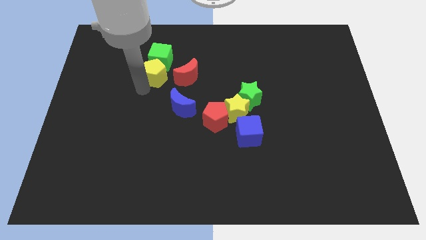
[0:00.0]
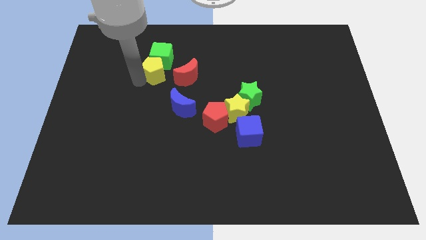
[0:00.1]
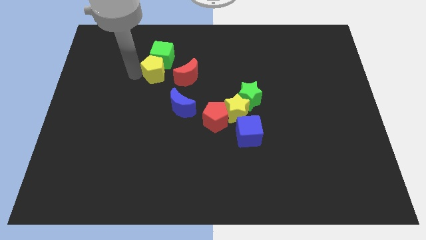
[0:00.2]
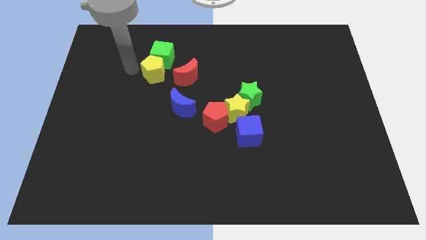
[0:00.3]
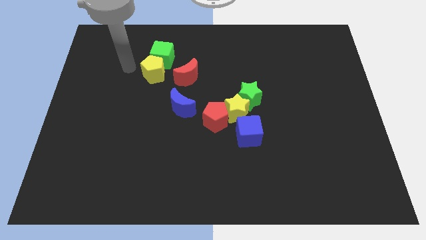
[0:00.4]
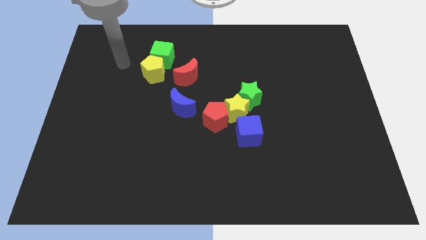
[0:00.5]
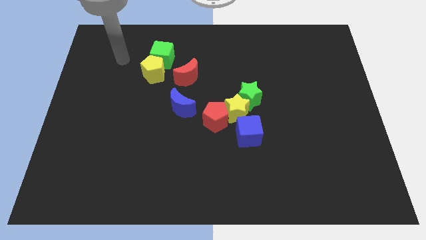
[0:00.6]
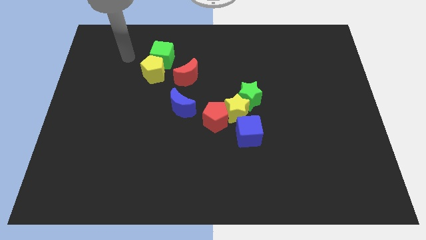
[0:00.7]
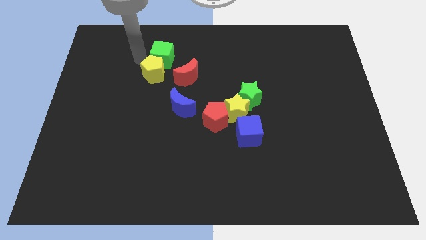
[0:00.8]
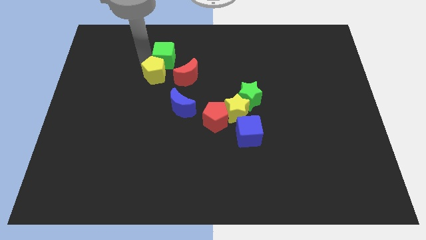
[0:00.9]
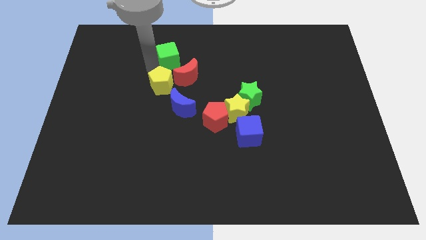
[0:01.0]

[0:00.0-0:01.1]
move the arm slightly touching the yellow pentagon from the left

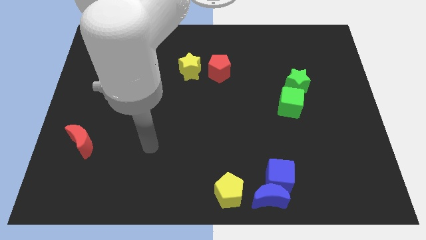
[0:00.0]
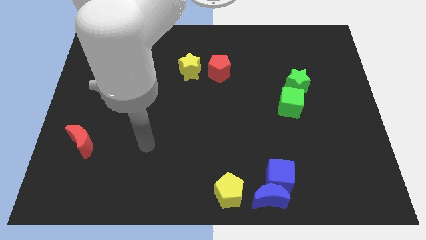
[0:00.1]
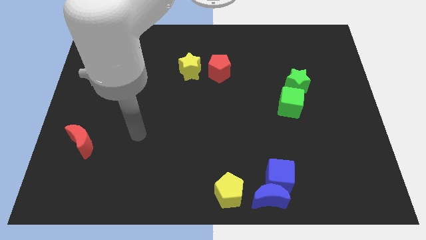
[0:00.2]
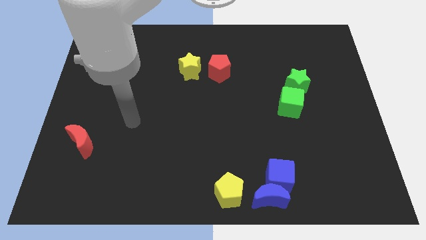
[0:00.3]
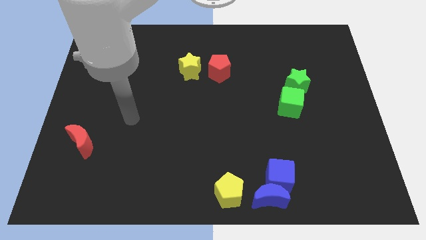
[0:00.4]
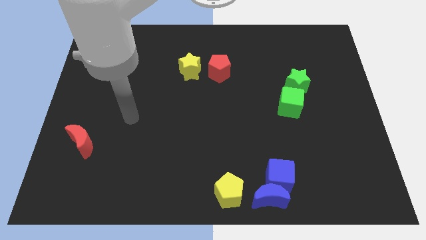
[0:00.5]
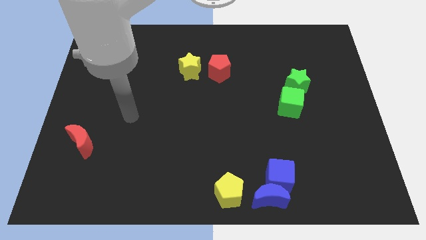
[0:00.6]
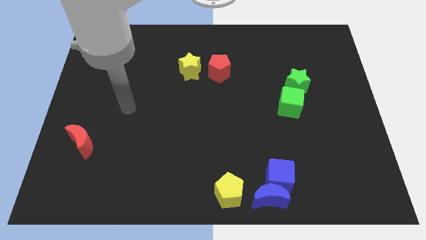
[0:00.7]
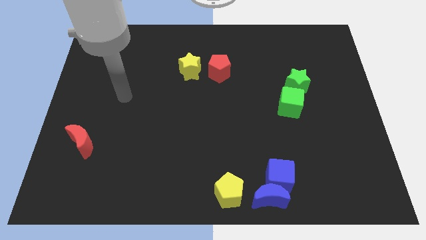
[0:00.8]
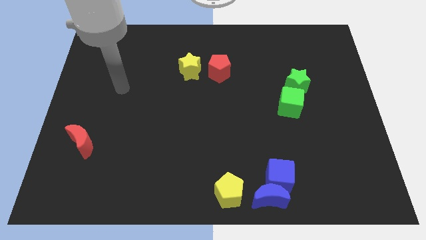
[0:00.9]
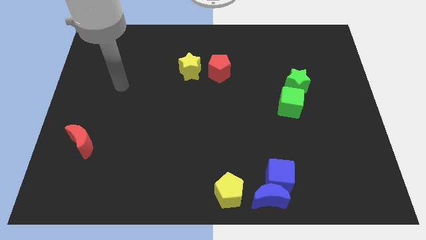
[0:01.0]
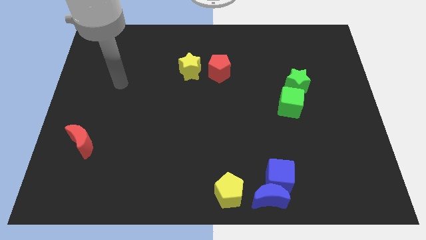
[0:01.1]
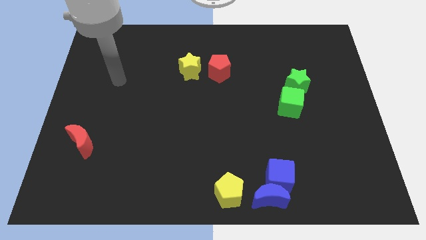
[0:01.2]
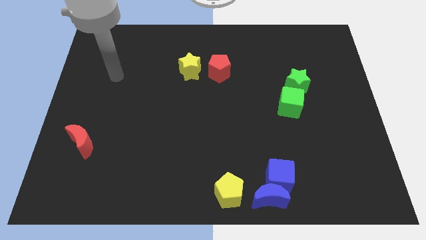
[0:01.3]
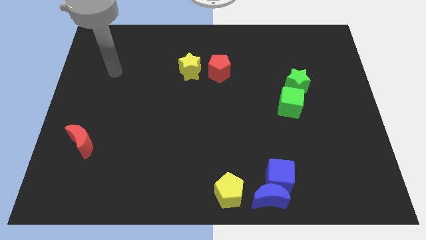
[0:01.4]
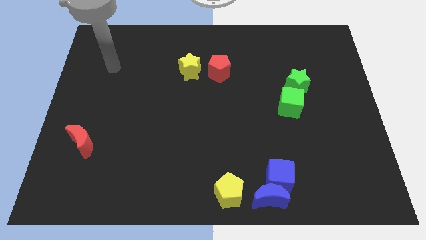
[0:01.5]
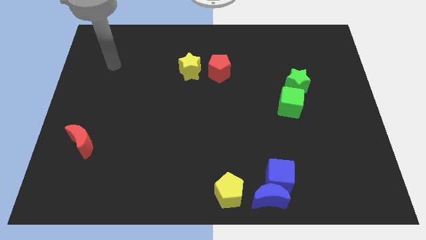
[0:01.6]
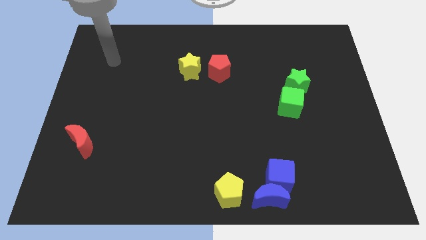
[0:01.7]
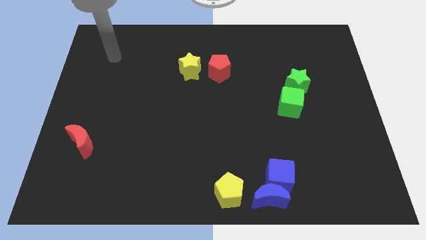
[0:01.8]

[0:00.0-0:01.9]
go to the top left of the board

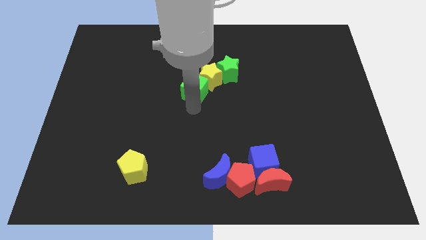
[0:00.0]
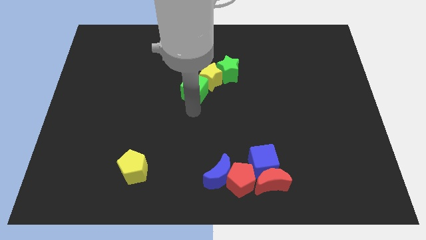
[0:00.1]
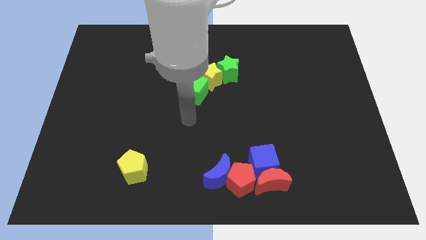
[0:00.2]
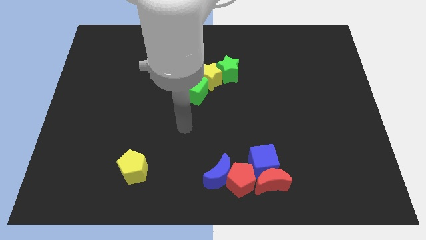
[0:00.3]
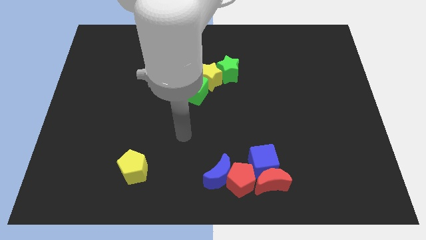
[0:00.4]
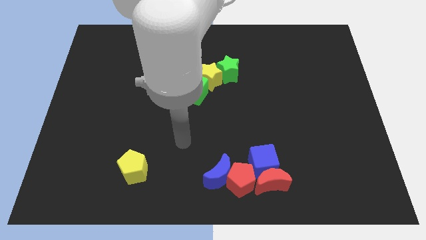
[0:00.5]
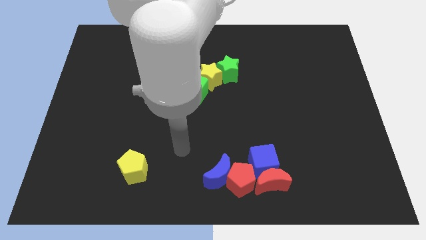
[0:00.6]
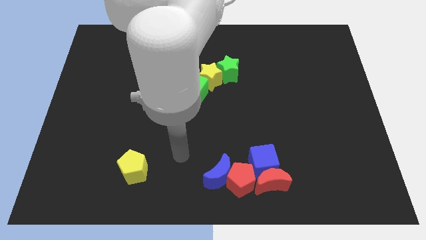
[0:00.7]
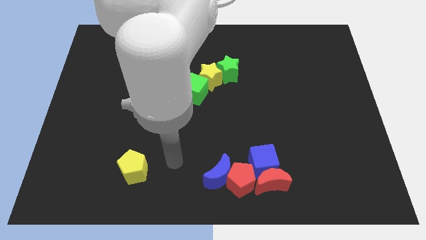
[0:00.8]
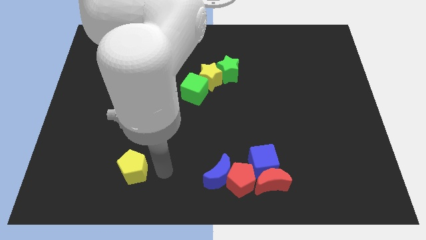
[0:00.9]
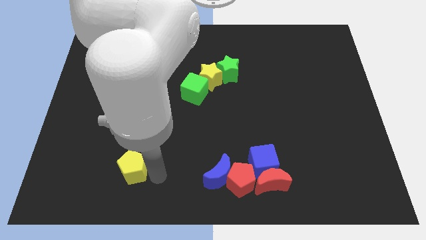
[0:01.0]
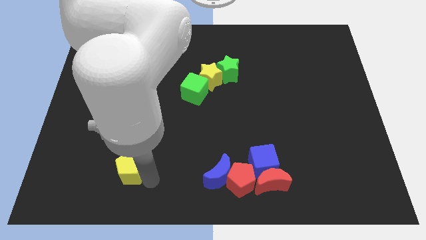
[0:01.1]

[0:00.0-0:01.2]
move your arm away from green cube

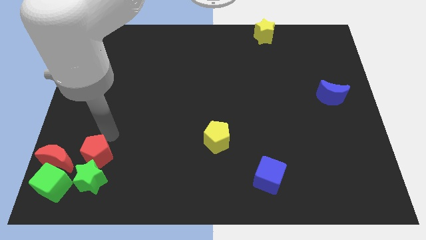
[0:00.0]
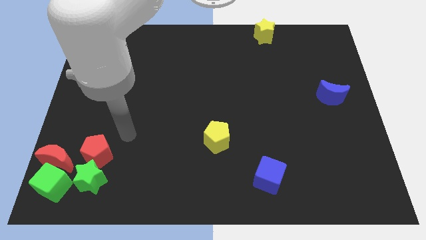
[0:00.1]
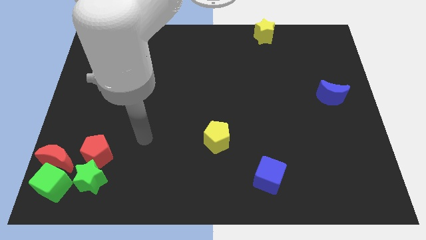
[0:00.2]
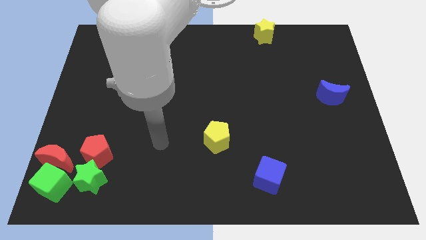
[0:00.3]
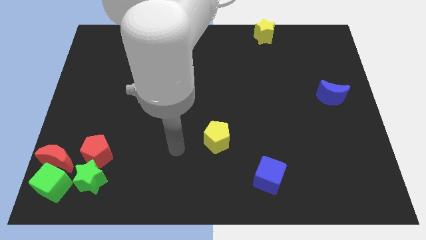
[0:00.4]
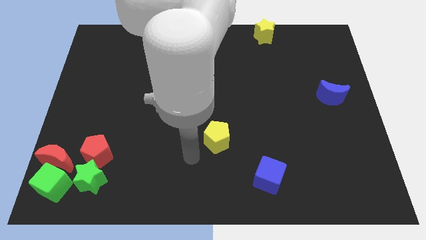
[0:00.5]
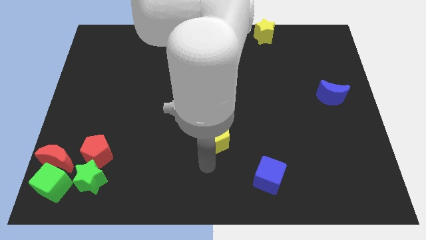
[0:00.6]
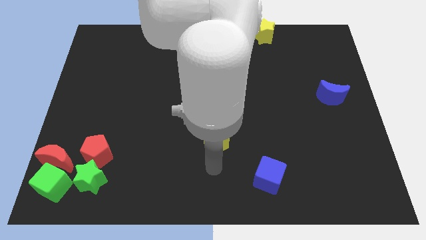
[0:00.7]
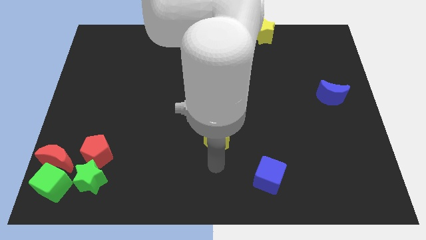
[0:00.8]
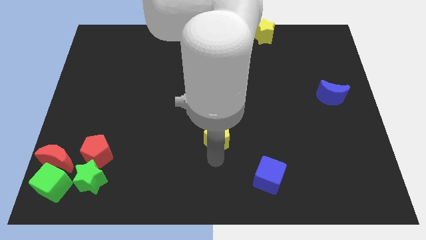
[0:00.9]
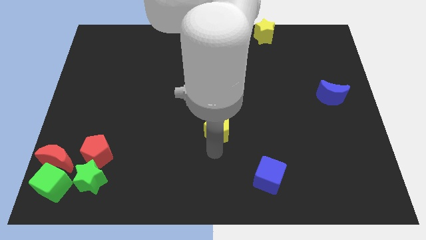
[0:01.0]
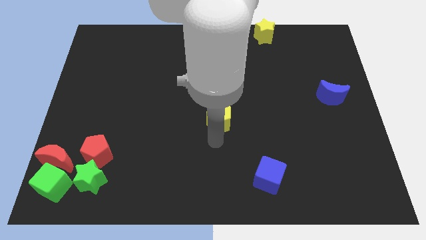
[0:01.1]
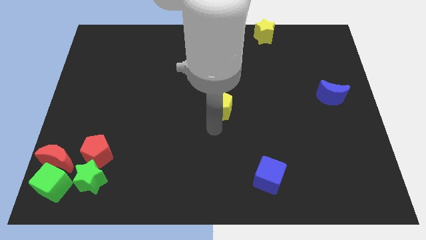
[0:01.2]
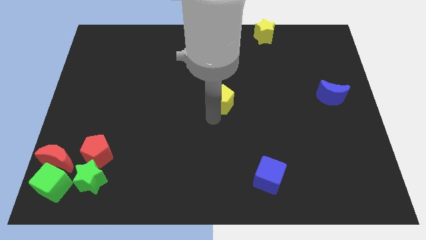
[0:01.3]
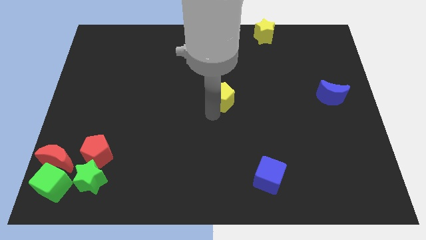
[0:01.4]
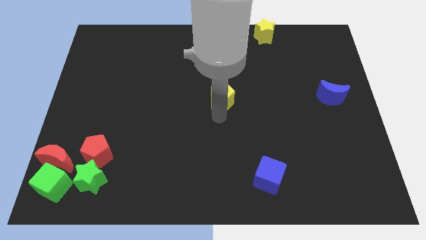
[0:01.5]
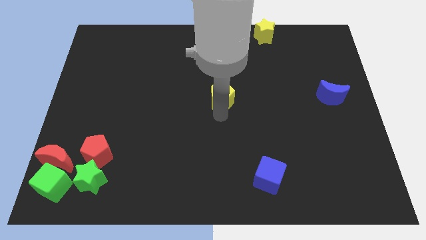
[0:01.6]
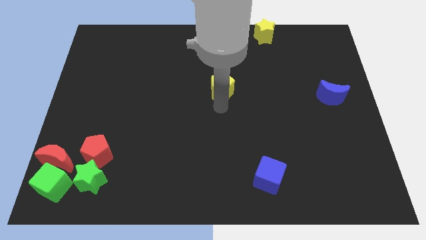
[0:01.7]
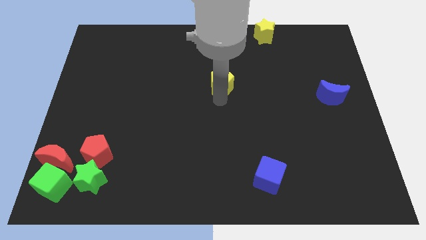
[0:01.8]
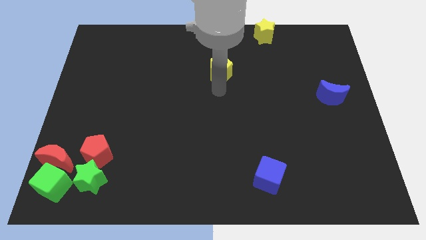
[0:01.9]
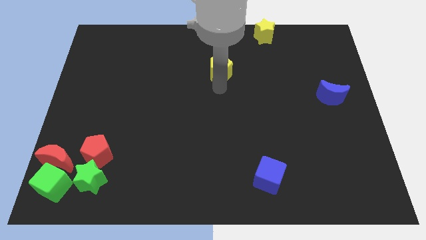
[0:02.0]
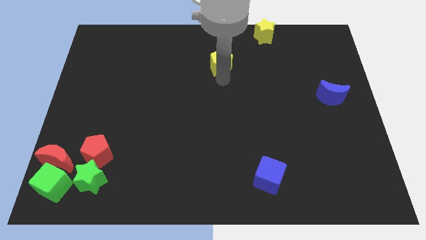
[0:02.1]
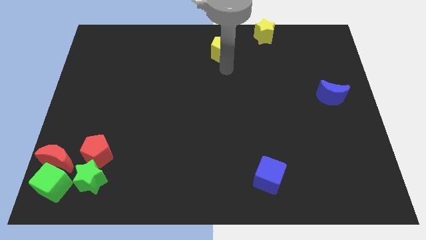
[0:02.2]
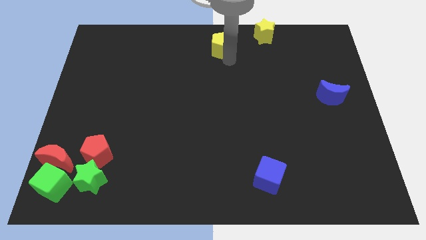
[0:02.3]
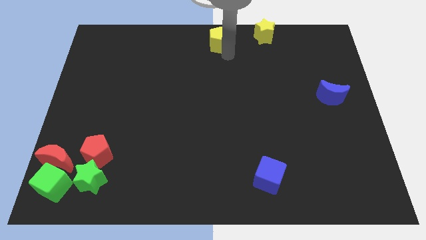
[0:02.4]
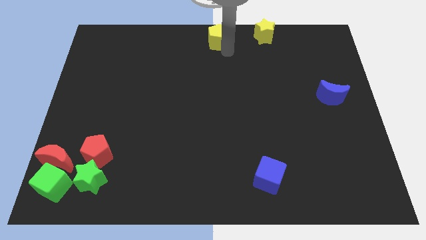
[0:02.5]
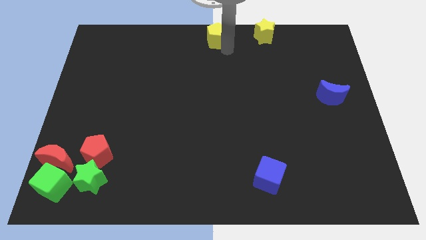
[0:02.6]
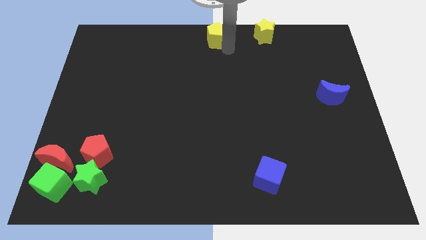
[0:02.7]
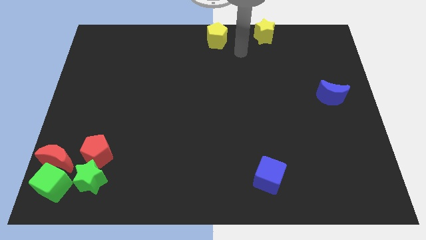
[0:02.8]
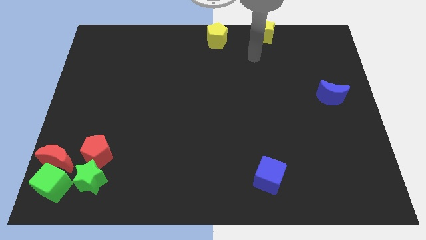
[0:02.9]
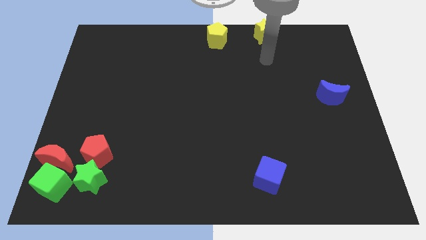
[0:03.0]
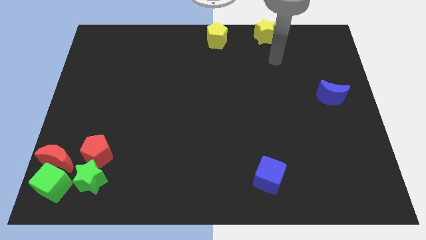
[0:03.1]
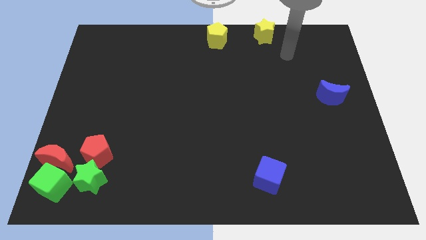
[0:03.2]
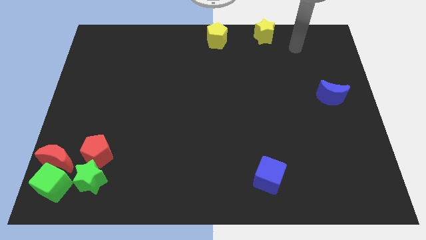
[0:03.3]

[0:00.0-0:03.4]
push the yellow pentagon to the left of the yellow star

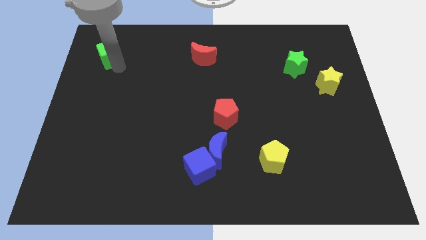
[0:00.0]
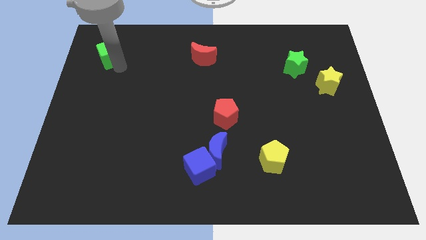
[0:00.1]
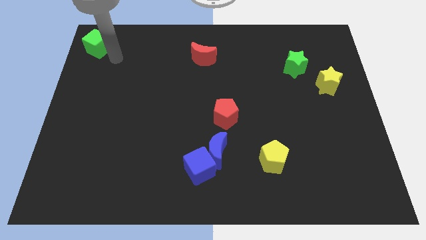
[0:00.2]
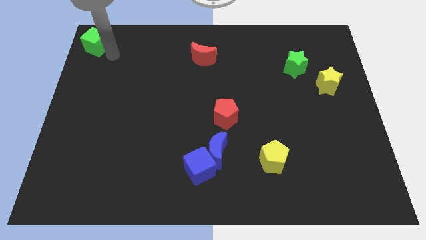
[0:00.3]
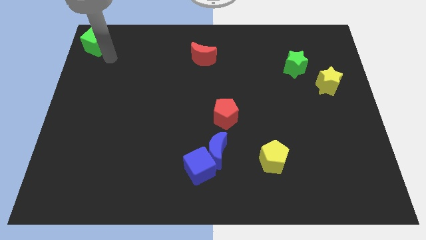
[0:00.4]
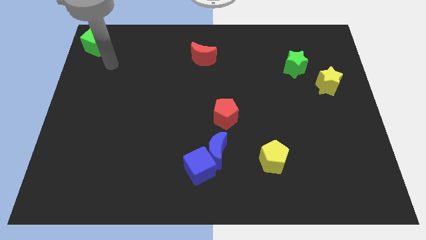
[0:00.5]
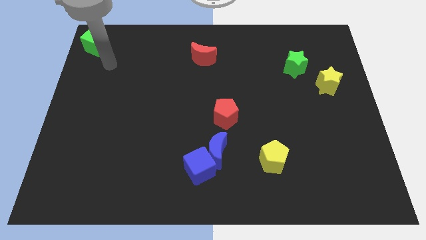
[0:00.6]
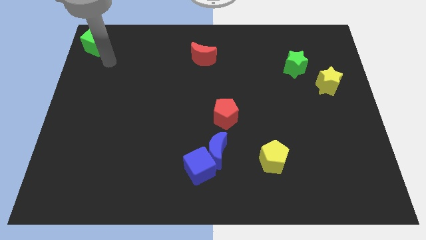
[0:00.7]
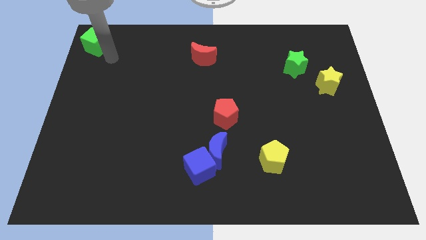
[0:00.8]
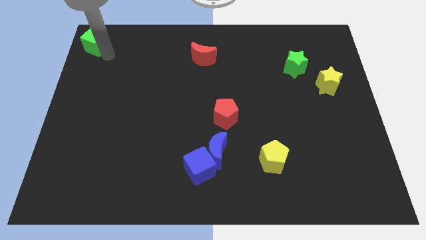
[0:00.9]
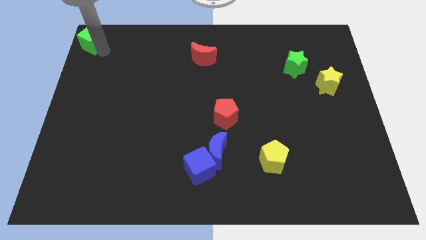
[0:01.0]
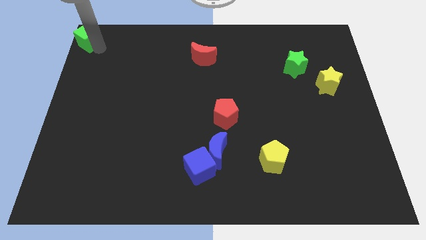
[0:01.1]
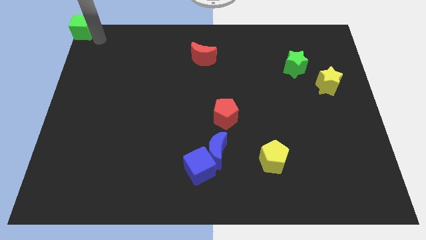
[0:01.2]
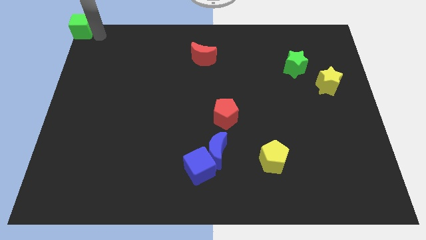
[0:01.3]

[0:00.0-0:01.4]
move the green cube to the top left corner of the board
